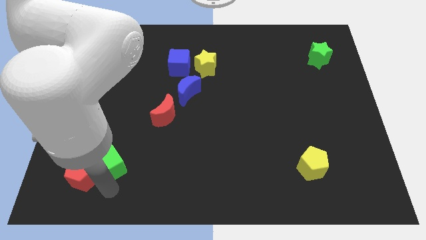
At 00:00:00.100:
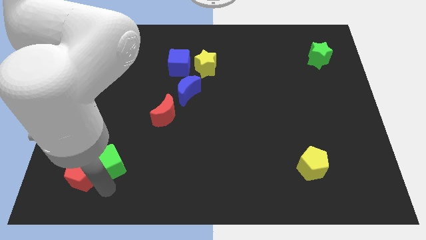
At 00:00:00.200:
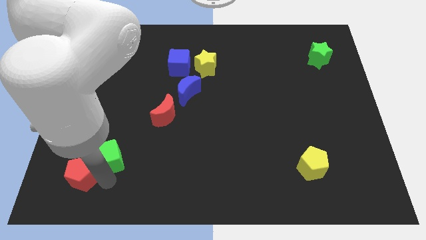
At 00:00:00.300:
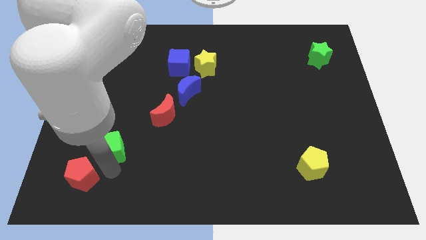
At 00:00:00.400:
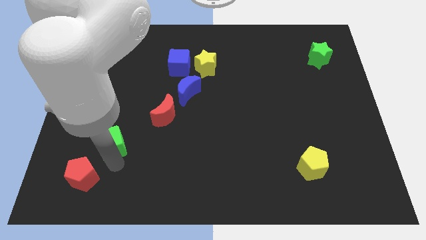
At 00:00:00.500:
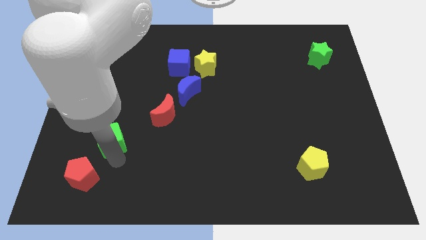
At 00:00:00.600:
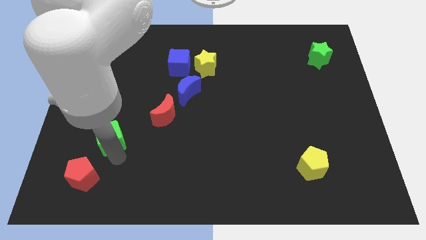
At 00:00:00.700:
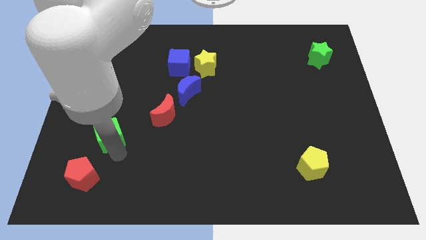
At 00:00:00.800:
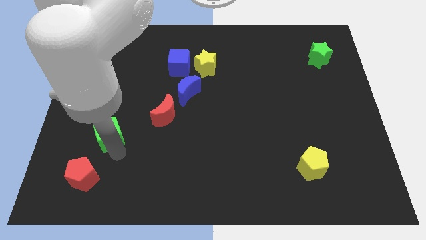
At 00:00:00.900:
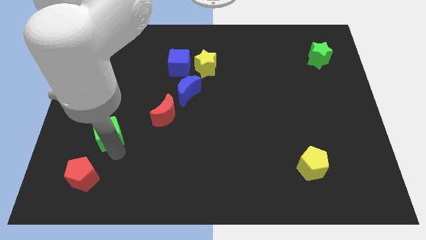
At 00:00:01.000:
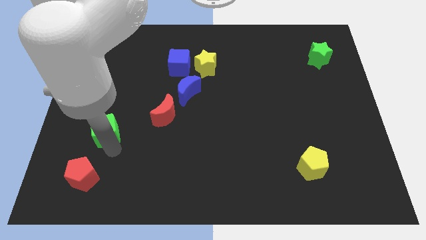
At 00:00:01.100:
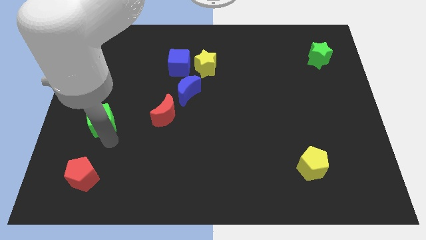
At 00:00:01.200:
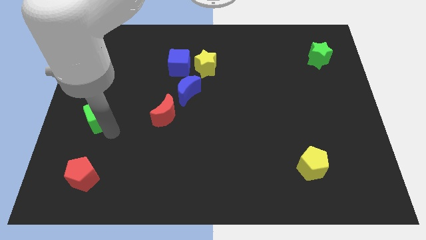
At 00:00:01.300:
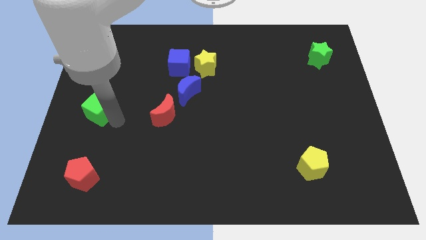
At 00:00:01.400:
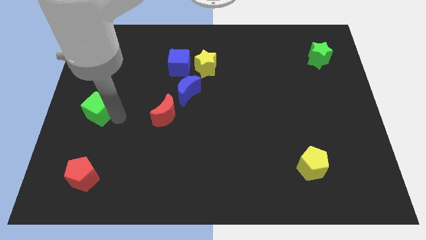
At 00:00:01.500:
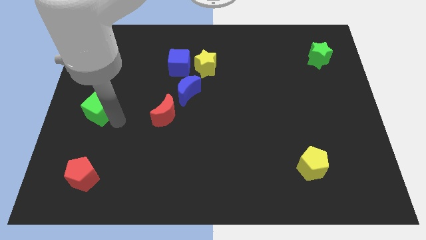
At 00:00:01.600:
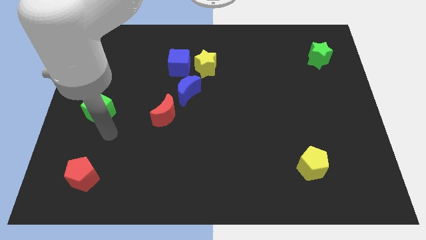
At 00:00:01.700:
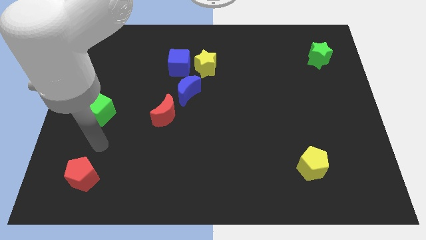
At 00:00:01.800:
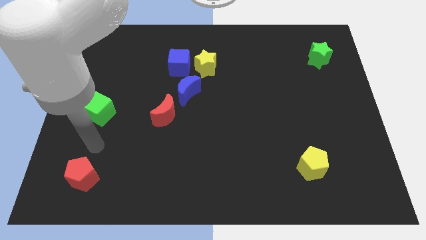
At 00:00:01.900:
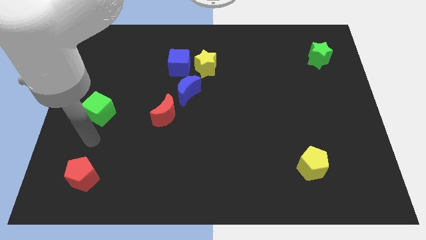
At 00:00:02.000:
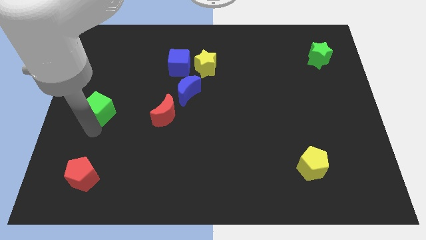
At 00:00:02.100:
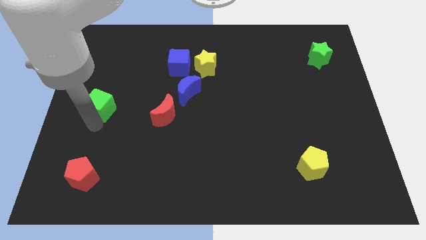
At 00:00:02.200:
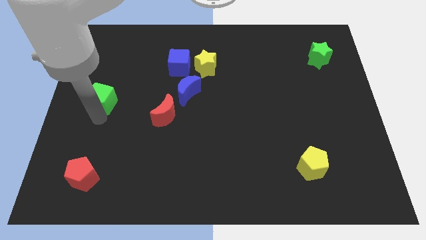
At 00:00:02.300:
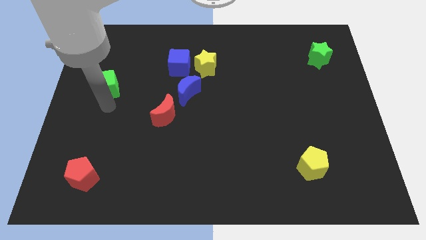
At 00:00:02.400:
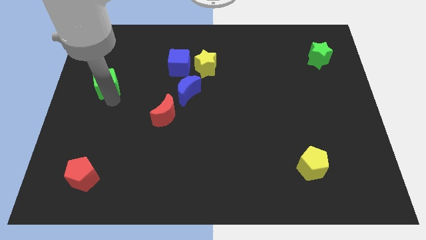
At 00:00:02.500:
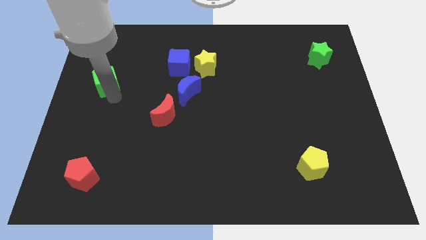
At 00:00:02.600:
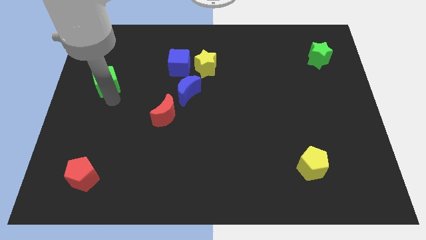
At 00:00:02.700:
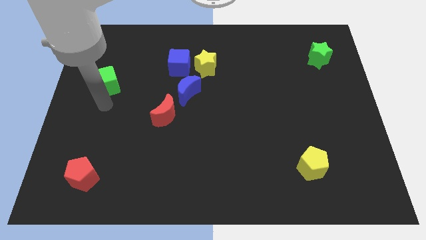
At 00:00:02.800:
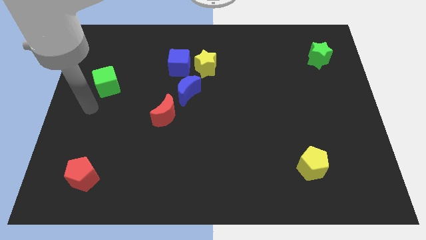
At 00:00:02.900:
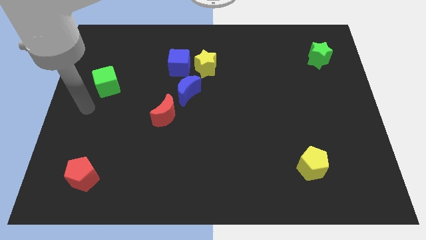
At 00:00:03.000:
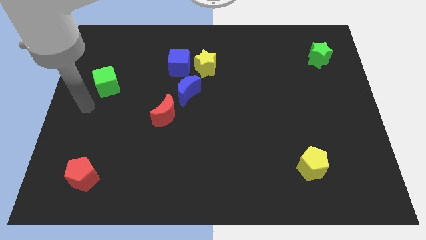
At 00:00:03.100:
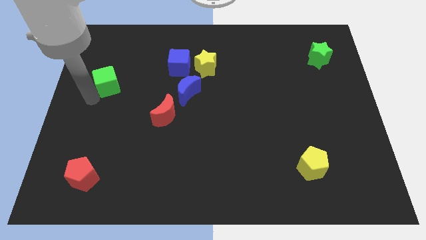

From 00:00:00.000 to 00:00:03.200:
push the green cube towards the top side of the board

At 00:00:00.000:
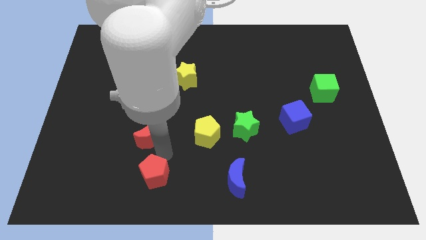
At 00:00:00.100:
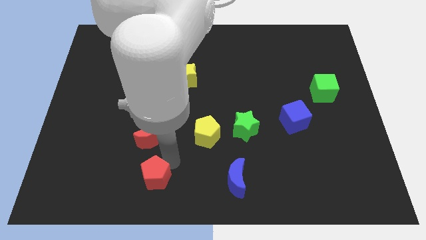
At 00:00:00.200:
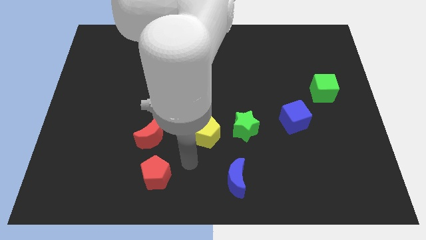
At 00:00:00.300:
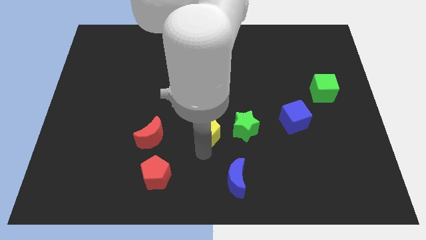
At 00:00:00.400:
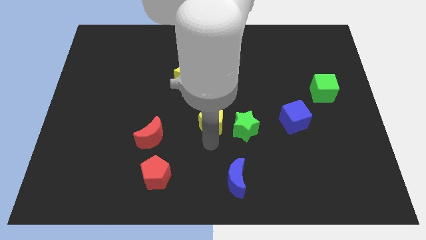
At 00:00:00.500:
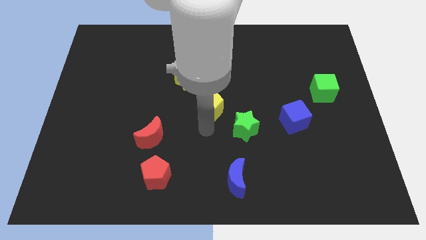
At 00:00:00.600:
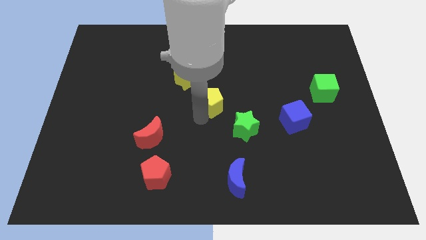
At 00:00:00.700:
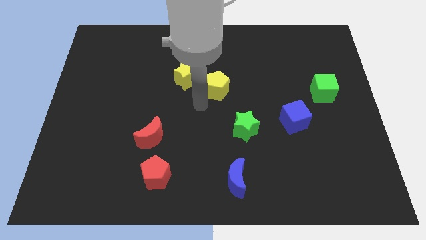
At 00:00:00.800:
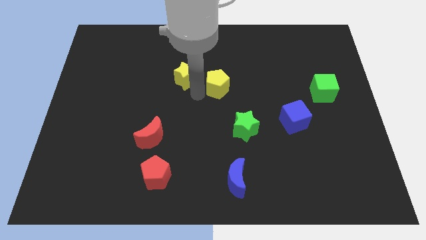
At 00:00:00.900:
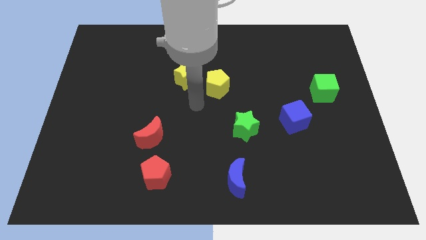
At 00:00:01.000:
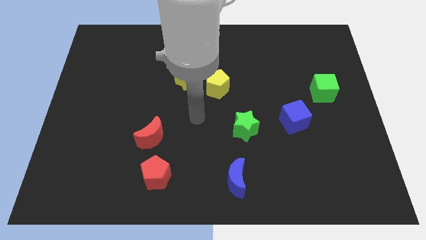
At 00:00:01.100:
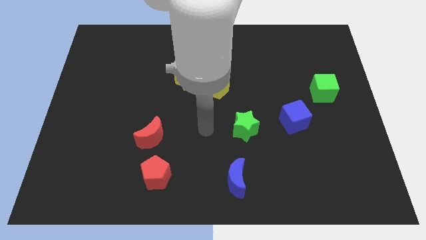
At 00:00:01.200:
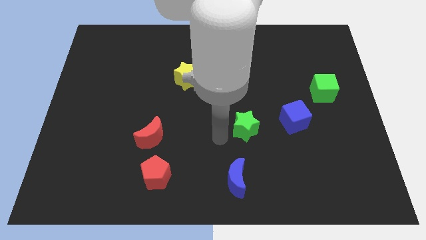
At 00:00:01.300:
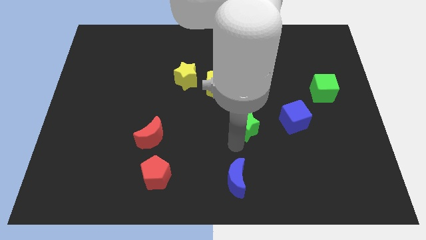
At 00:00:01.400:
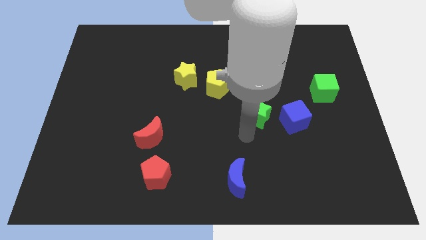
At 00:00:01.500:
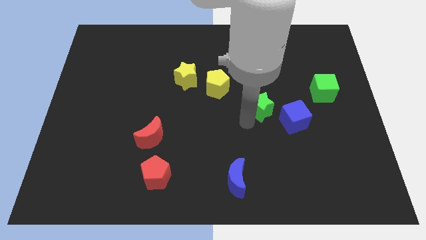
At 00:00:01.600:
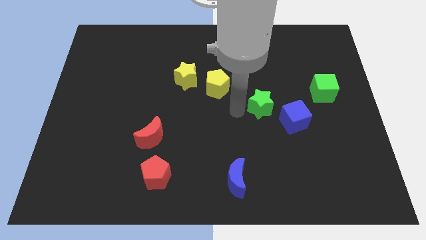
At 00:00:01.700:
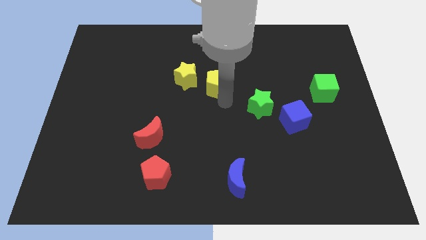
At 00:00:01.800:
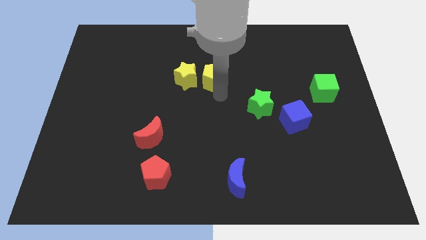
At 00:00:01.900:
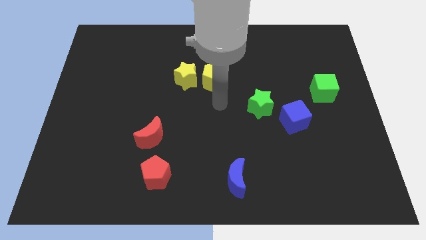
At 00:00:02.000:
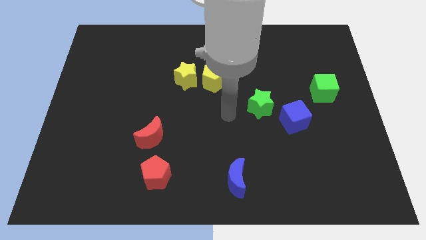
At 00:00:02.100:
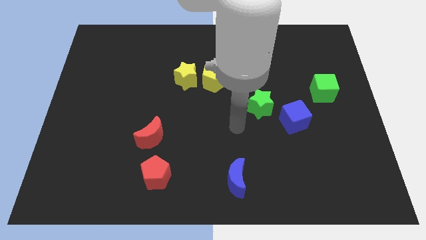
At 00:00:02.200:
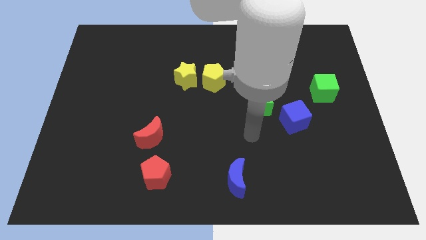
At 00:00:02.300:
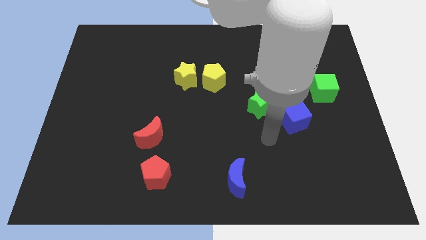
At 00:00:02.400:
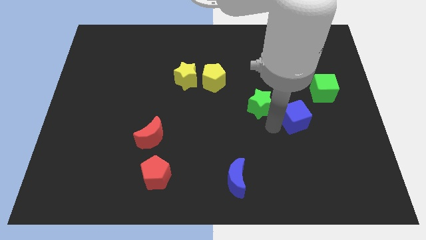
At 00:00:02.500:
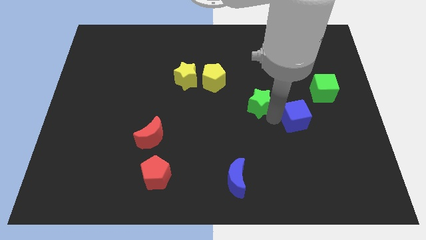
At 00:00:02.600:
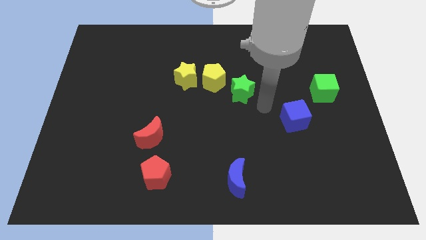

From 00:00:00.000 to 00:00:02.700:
move your arm away from the red pentagon

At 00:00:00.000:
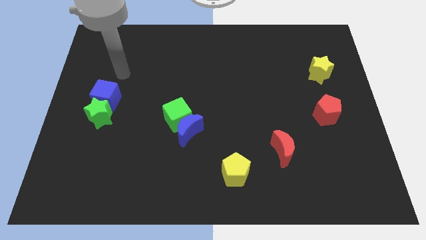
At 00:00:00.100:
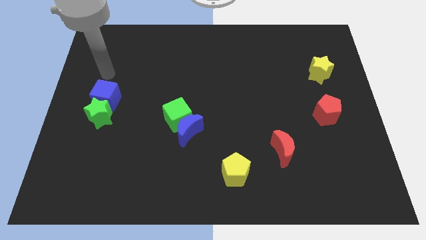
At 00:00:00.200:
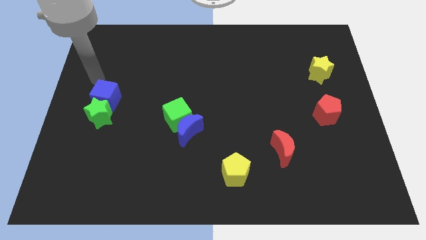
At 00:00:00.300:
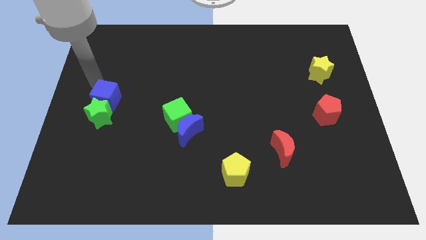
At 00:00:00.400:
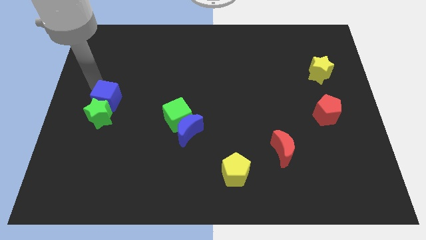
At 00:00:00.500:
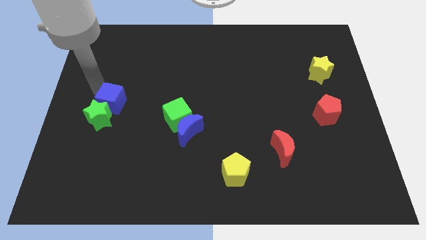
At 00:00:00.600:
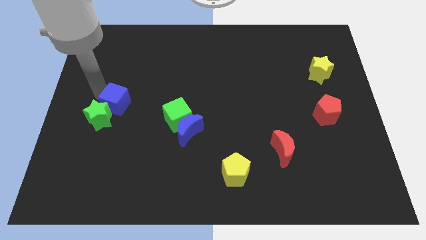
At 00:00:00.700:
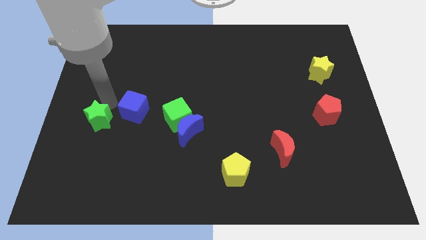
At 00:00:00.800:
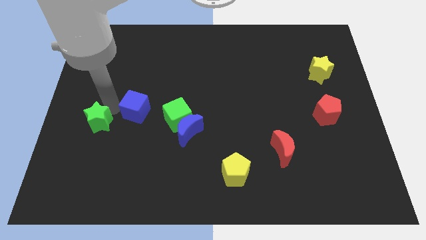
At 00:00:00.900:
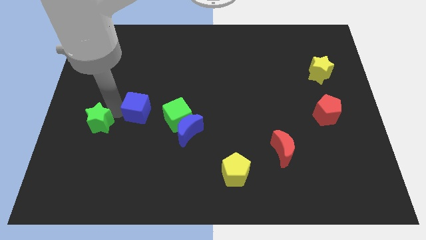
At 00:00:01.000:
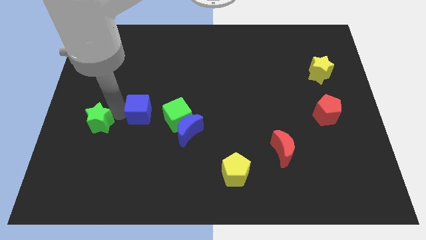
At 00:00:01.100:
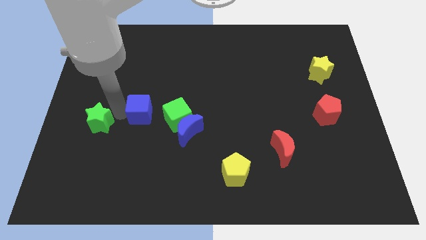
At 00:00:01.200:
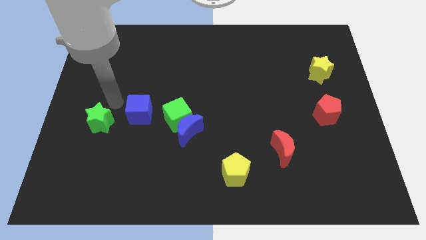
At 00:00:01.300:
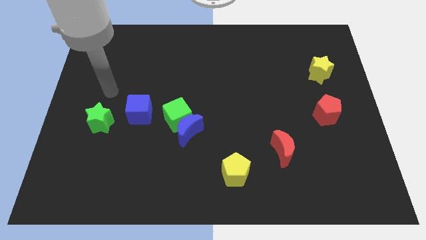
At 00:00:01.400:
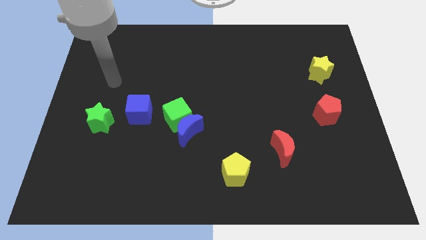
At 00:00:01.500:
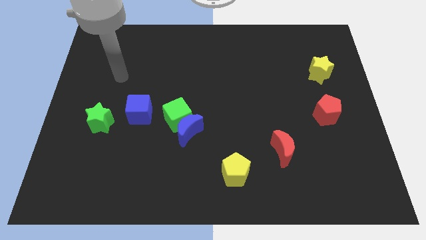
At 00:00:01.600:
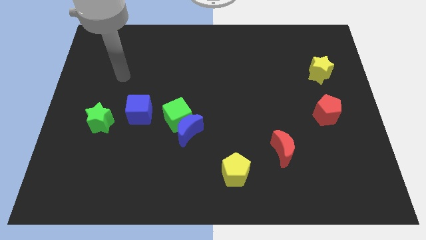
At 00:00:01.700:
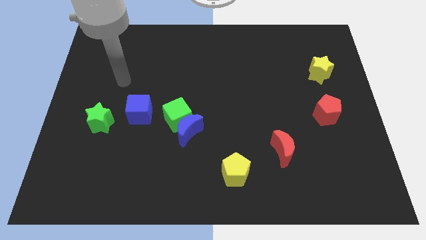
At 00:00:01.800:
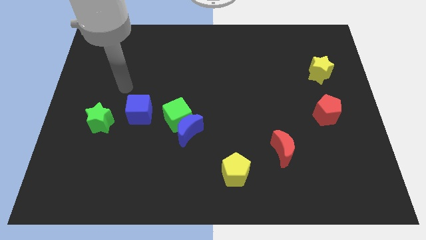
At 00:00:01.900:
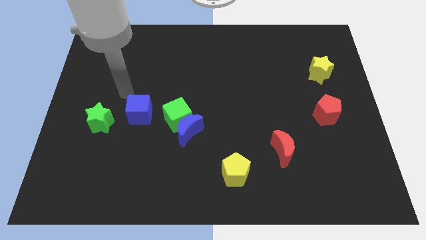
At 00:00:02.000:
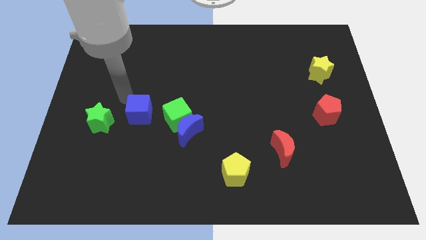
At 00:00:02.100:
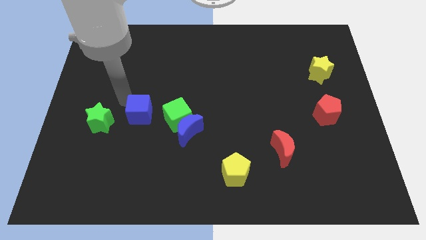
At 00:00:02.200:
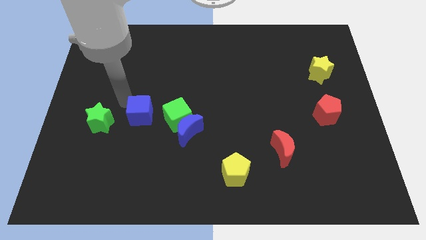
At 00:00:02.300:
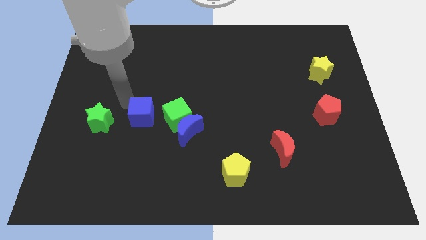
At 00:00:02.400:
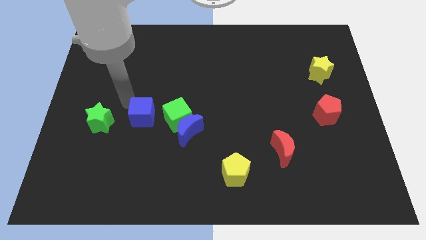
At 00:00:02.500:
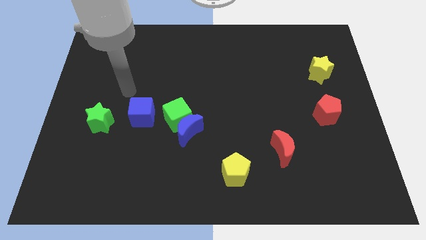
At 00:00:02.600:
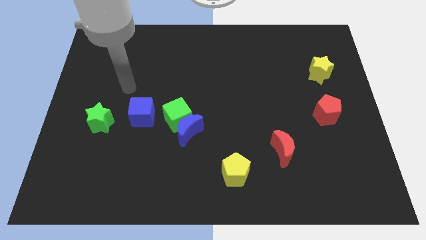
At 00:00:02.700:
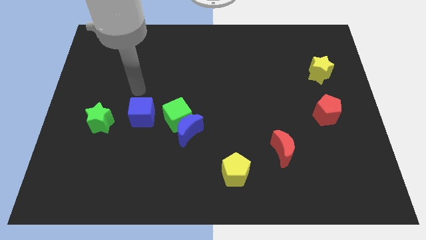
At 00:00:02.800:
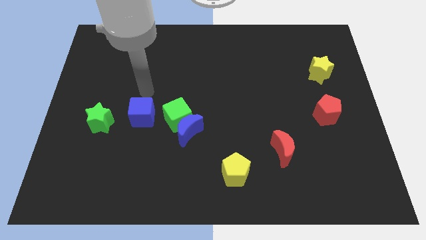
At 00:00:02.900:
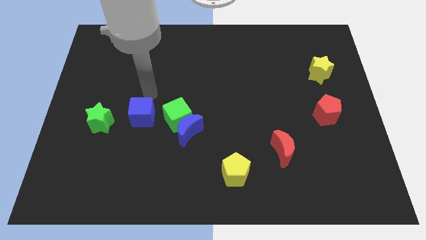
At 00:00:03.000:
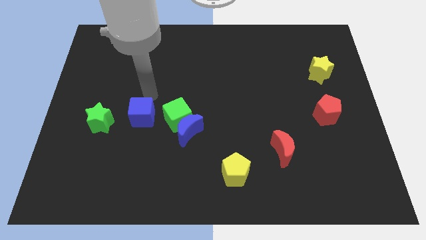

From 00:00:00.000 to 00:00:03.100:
separate blue cube from green star
